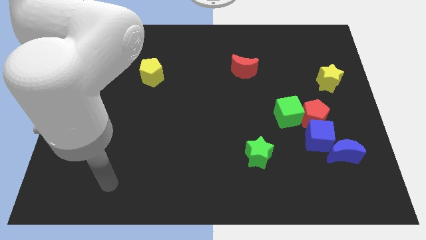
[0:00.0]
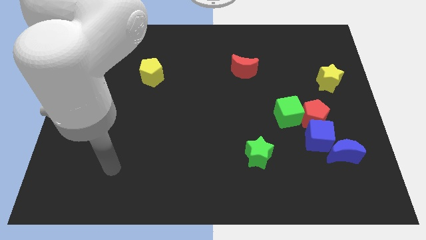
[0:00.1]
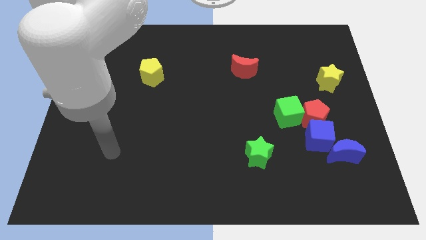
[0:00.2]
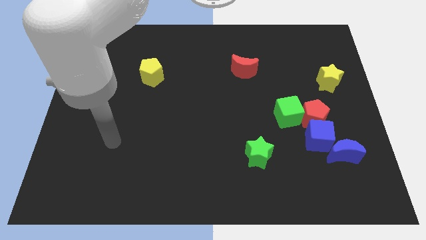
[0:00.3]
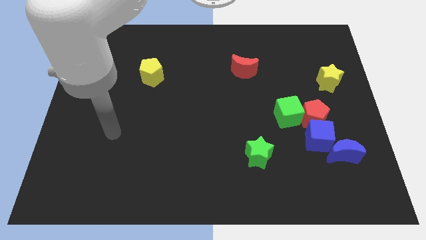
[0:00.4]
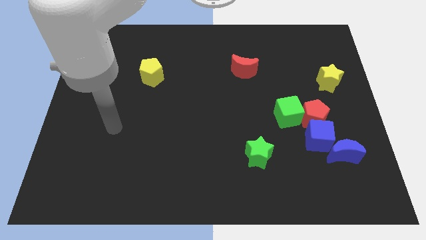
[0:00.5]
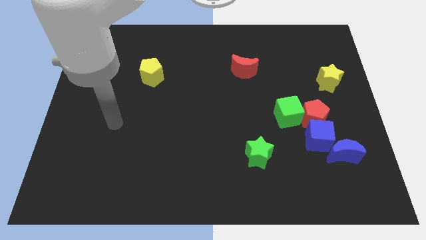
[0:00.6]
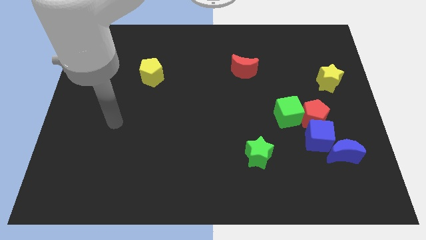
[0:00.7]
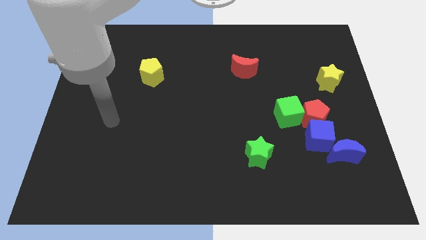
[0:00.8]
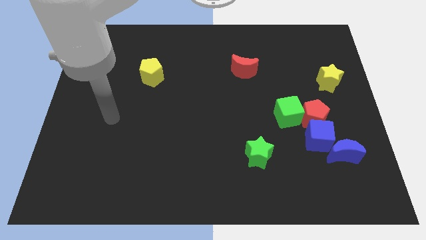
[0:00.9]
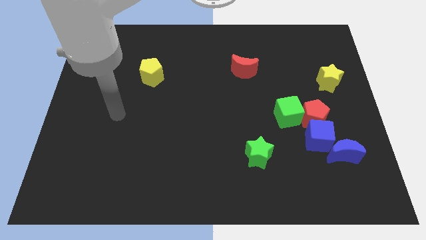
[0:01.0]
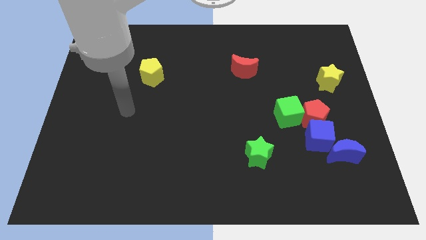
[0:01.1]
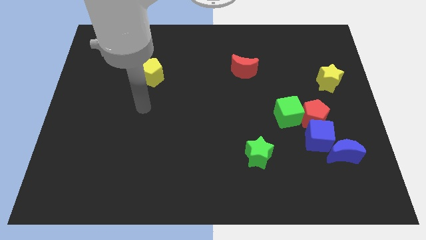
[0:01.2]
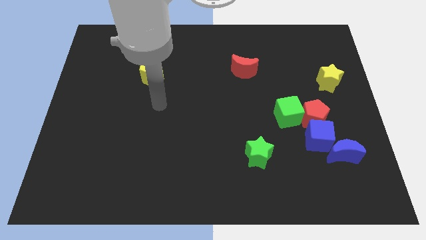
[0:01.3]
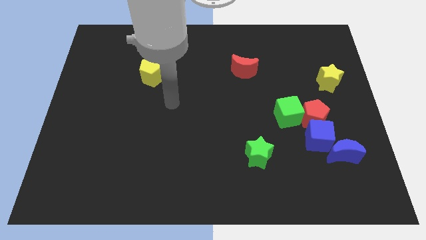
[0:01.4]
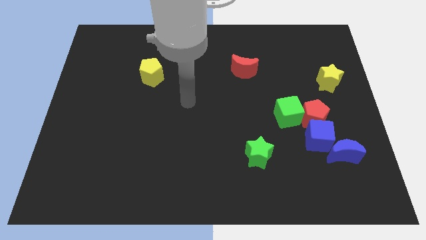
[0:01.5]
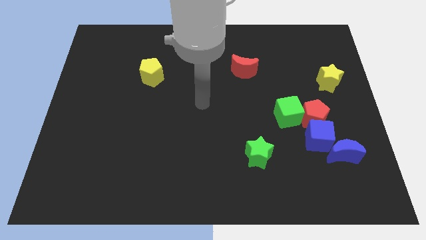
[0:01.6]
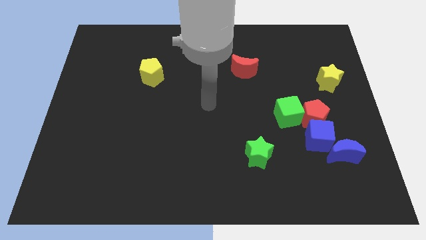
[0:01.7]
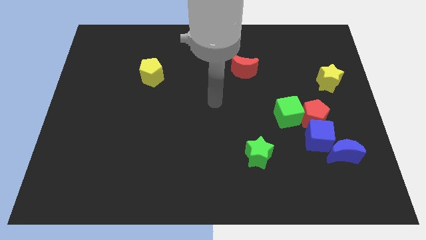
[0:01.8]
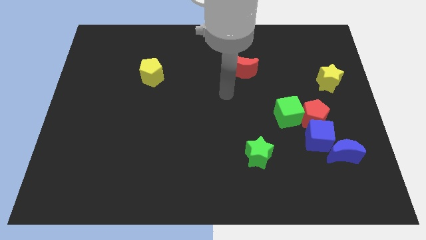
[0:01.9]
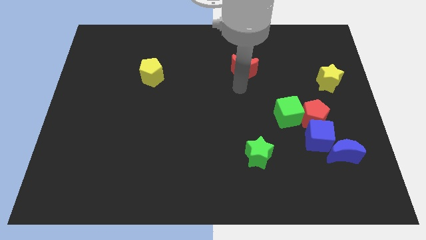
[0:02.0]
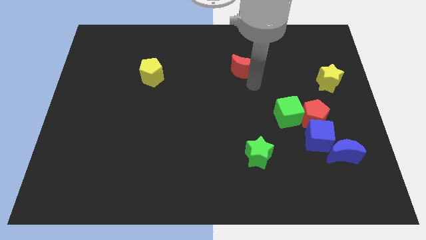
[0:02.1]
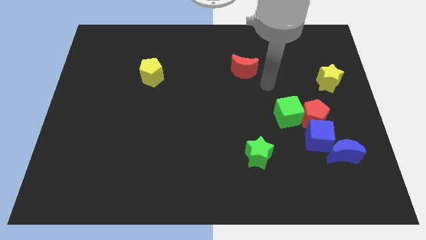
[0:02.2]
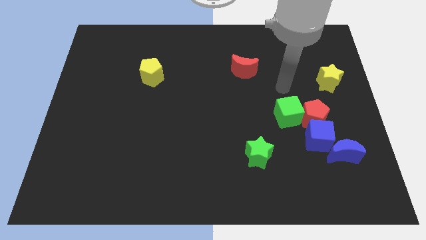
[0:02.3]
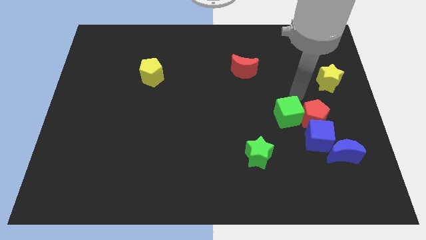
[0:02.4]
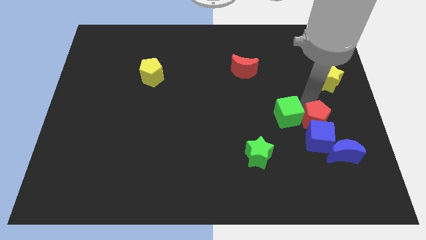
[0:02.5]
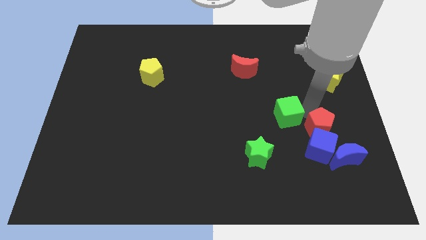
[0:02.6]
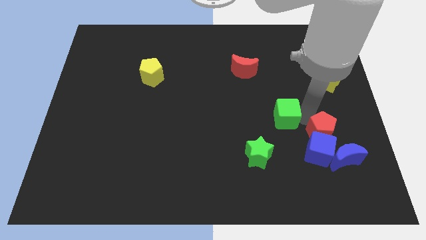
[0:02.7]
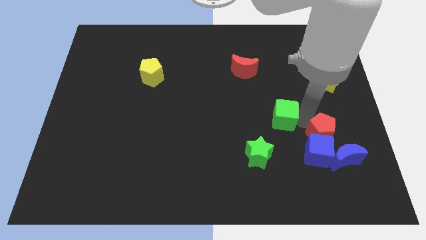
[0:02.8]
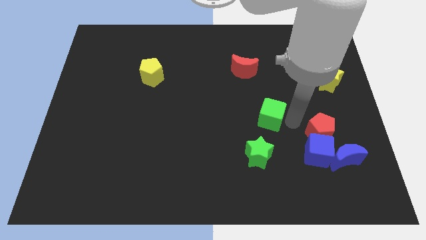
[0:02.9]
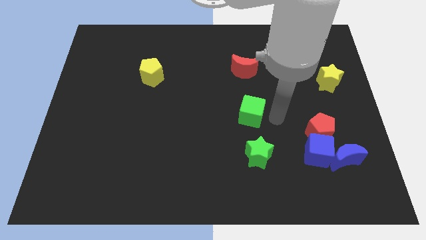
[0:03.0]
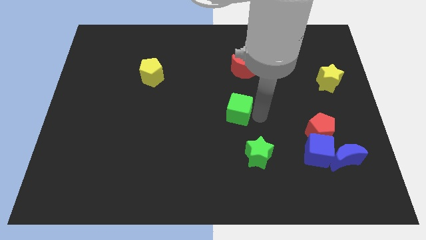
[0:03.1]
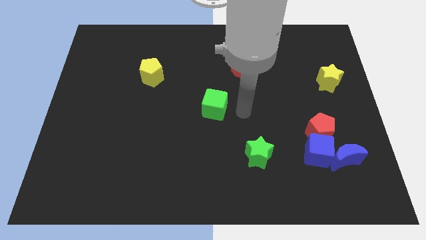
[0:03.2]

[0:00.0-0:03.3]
move the red pentagon into the blue cube

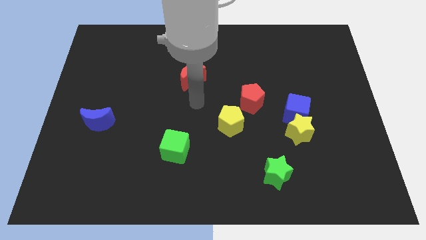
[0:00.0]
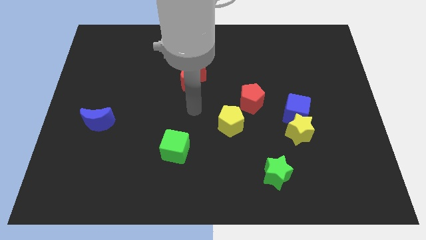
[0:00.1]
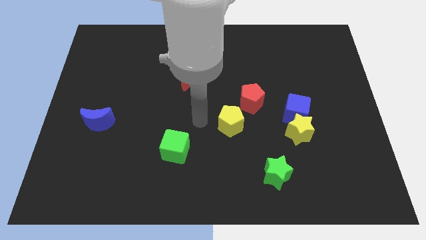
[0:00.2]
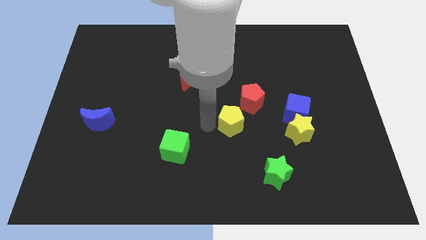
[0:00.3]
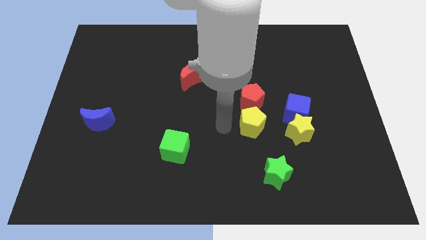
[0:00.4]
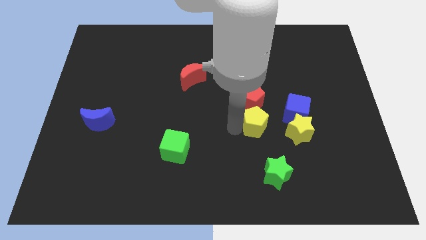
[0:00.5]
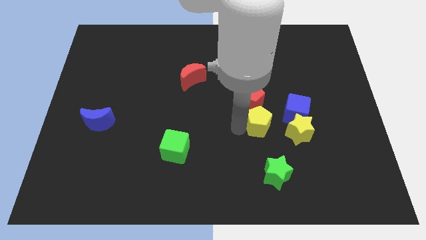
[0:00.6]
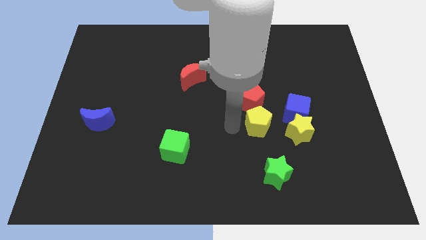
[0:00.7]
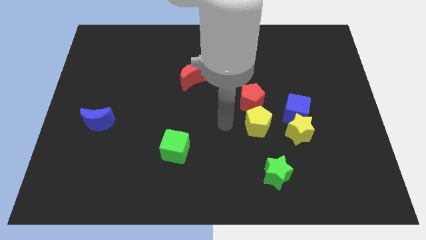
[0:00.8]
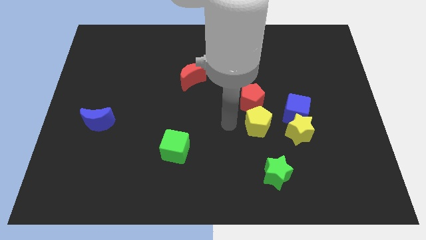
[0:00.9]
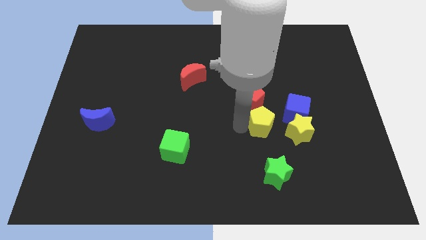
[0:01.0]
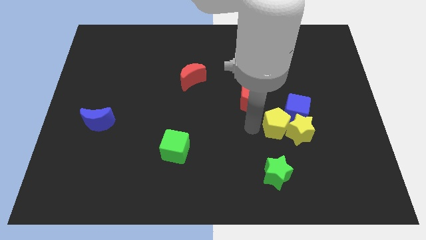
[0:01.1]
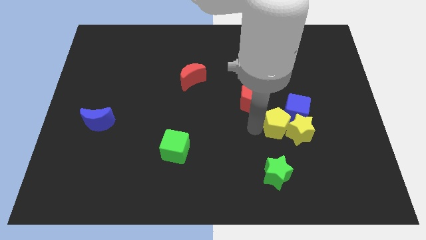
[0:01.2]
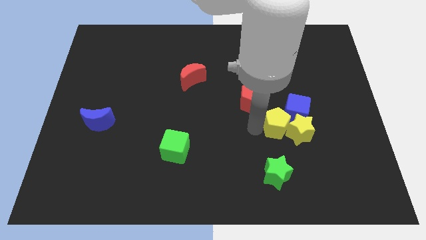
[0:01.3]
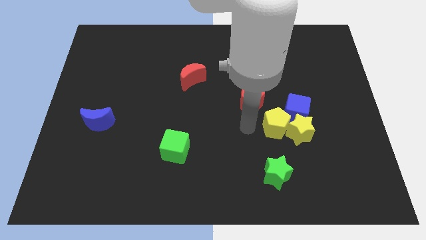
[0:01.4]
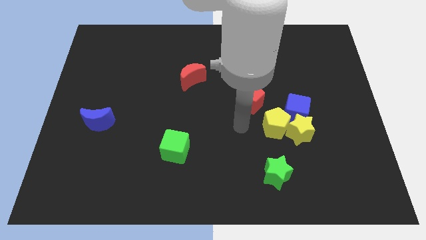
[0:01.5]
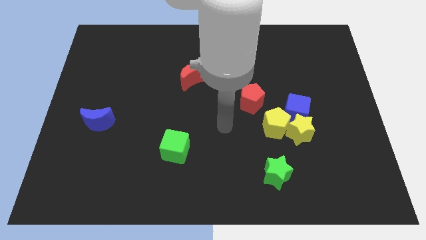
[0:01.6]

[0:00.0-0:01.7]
move yellow pentagon into the yellow star

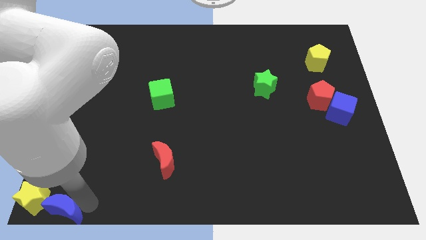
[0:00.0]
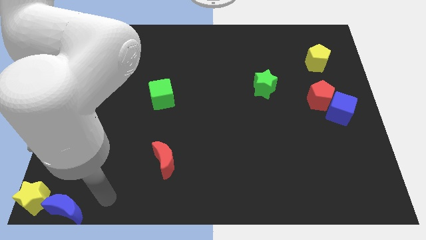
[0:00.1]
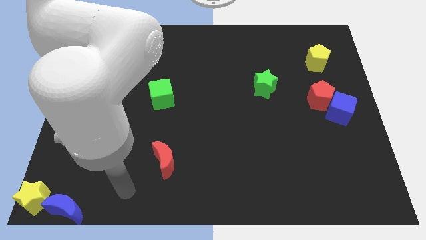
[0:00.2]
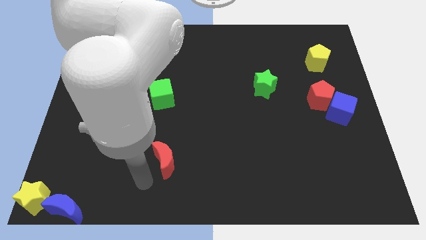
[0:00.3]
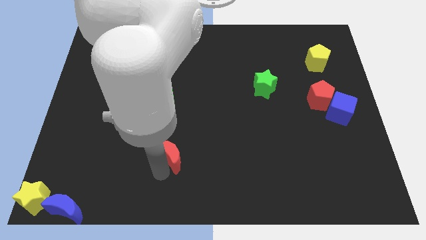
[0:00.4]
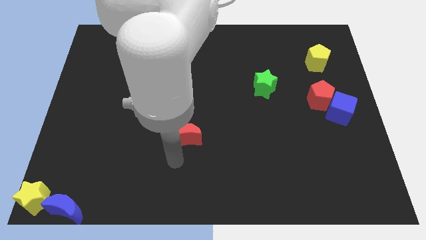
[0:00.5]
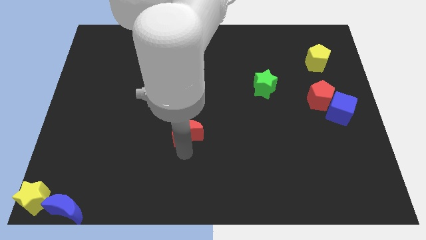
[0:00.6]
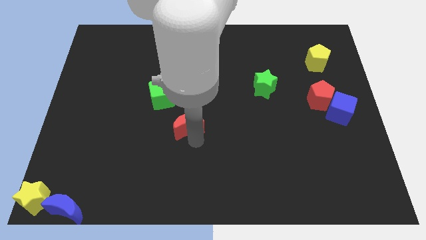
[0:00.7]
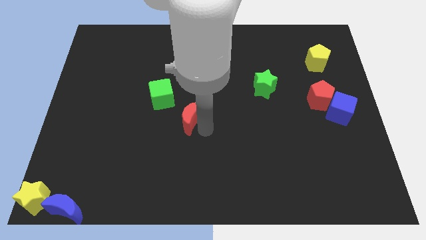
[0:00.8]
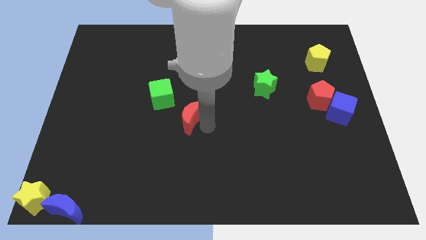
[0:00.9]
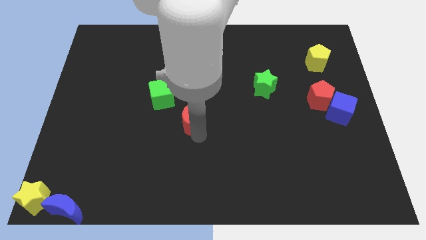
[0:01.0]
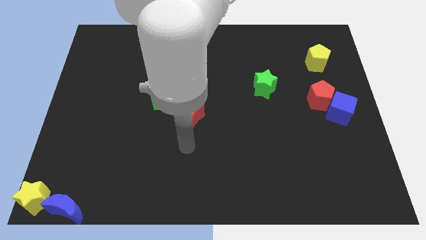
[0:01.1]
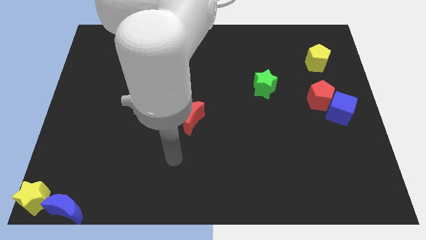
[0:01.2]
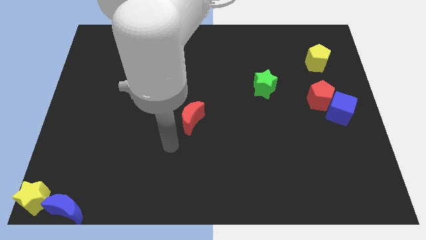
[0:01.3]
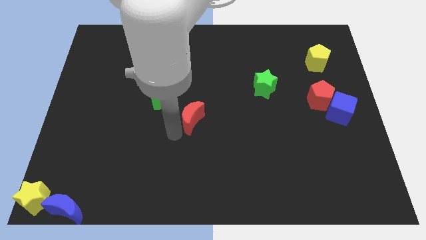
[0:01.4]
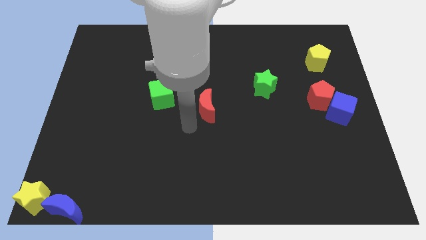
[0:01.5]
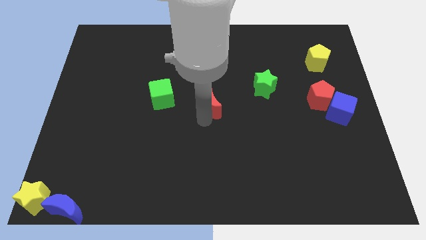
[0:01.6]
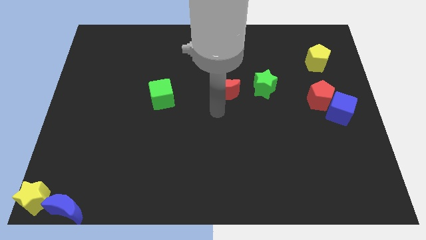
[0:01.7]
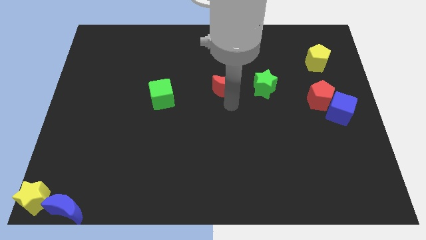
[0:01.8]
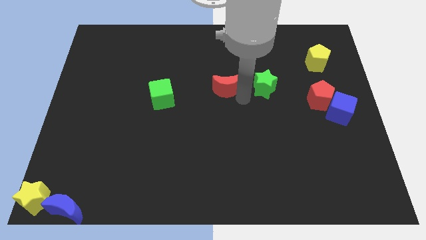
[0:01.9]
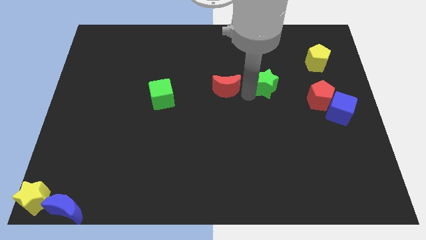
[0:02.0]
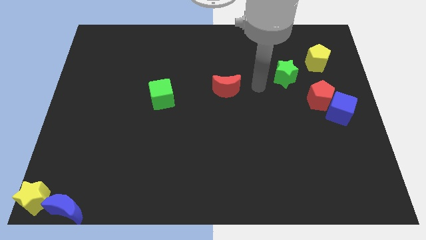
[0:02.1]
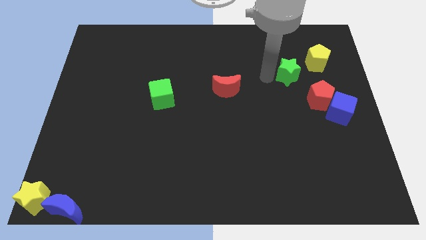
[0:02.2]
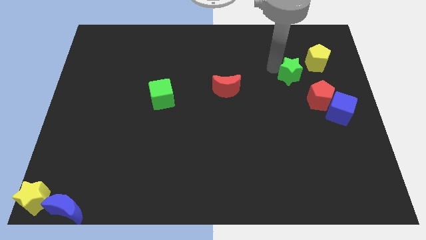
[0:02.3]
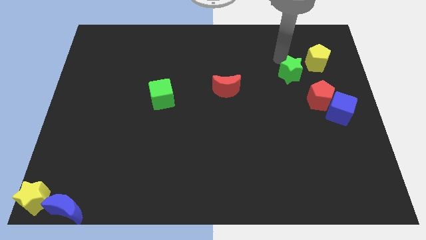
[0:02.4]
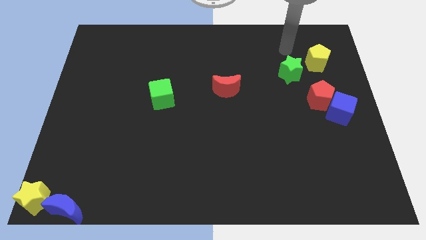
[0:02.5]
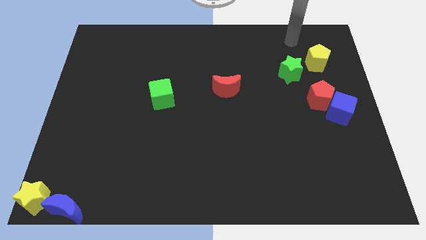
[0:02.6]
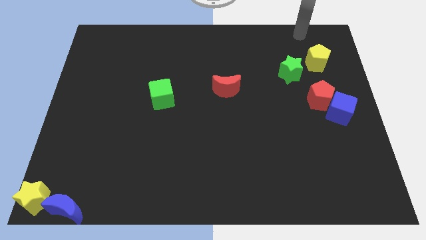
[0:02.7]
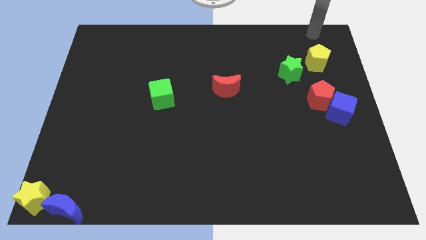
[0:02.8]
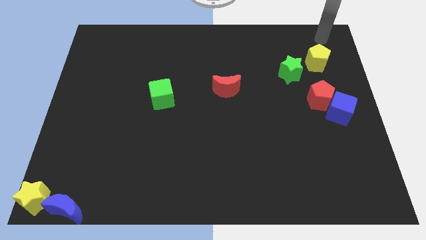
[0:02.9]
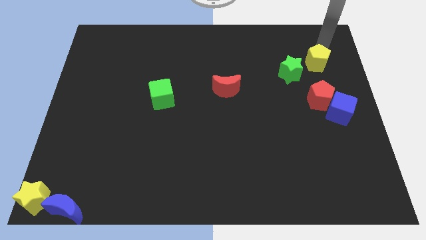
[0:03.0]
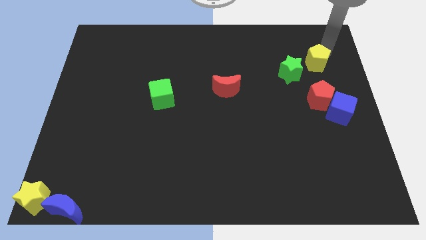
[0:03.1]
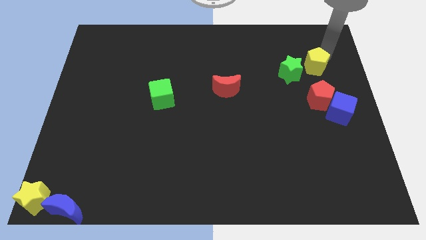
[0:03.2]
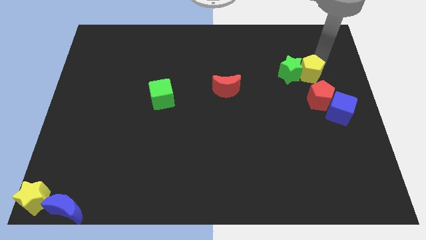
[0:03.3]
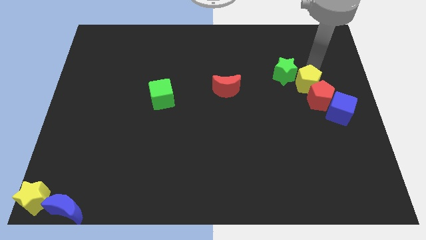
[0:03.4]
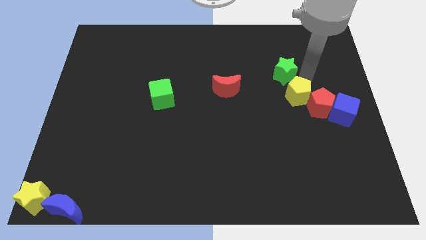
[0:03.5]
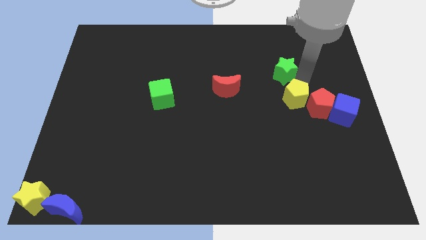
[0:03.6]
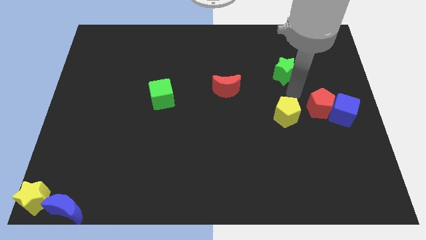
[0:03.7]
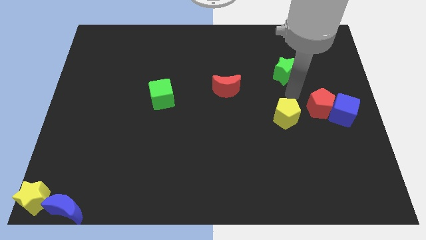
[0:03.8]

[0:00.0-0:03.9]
slide the red moon horizontally on the right side of the green cube
